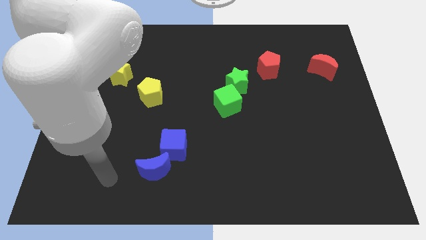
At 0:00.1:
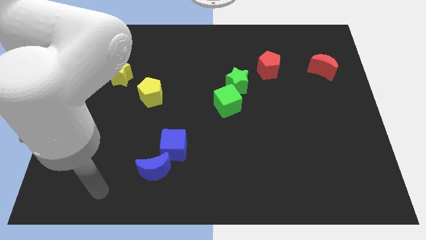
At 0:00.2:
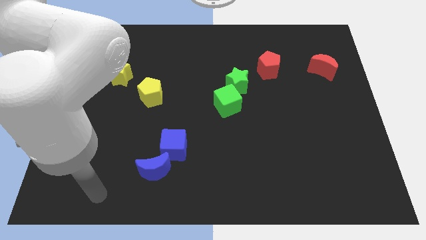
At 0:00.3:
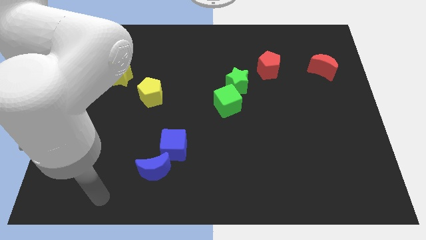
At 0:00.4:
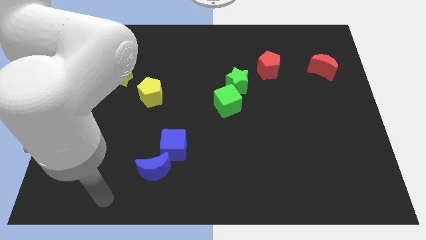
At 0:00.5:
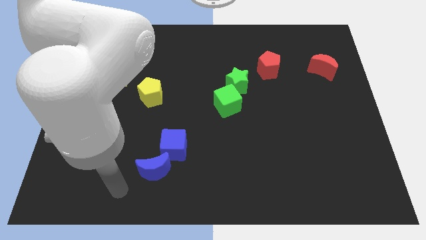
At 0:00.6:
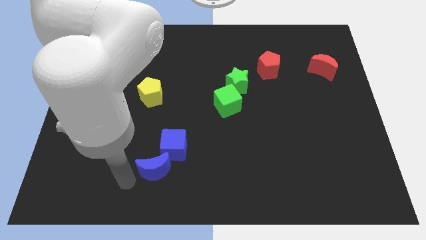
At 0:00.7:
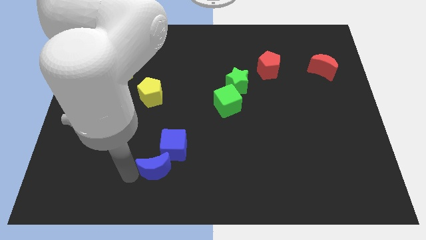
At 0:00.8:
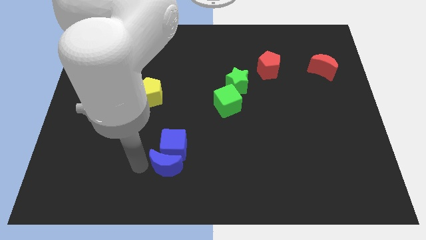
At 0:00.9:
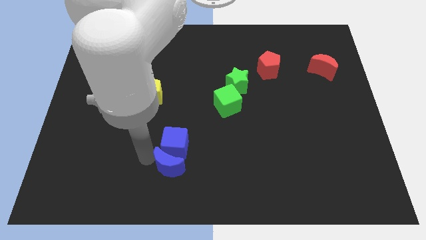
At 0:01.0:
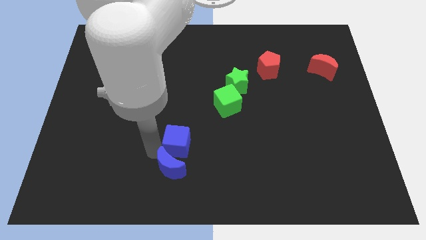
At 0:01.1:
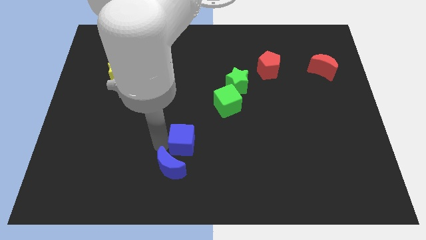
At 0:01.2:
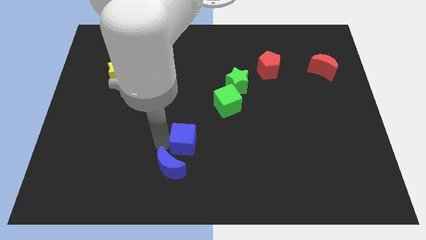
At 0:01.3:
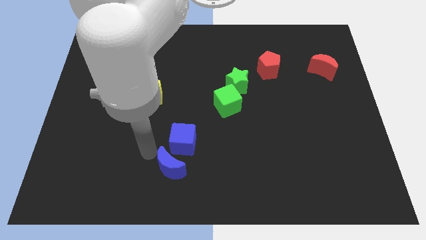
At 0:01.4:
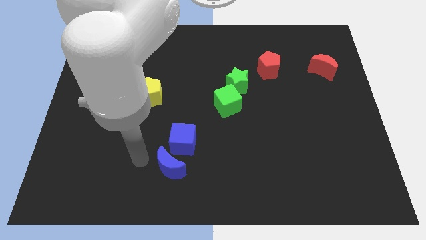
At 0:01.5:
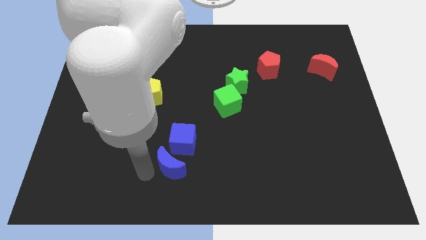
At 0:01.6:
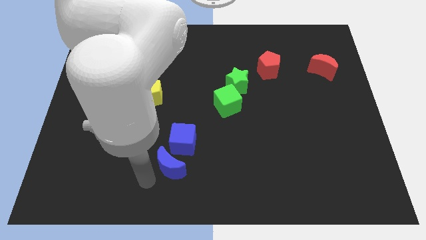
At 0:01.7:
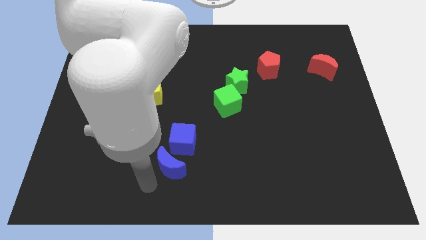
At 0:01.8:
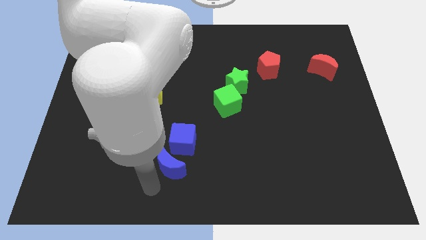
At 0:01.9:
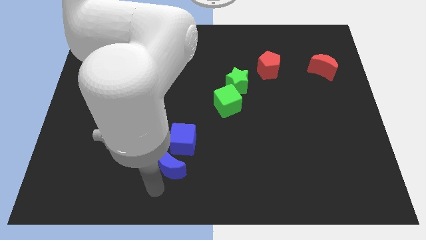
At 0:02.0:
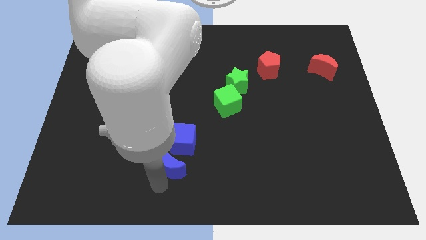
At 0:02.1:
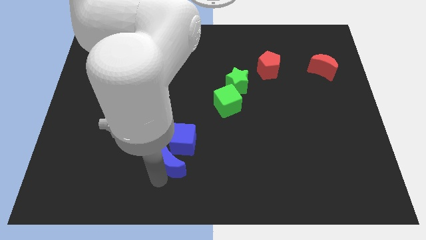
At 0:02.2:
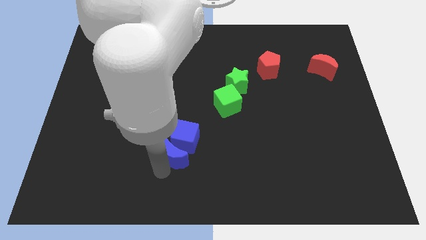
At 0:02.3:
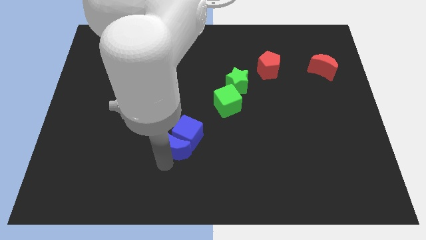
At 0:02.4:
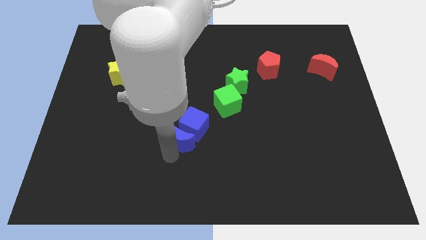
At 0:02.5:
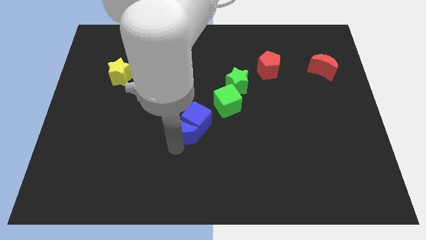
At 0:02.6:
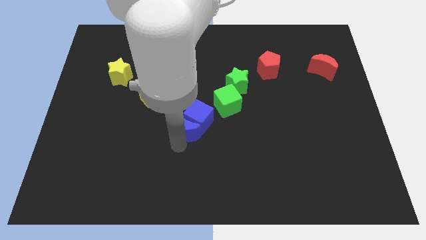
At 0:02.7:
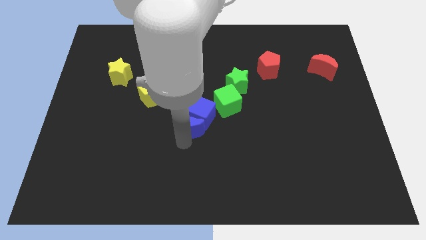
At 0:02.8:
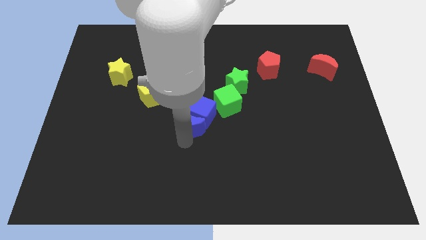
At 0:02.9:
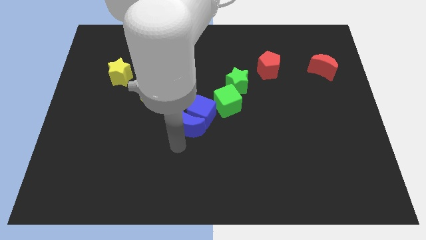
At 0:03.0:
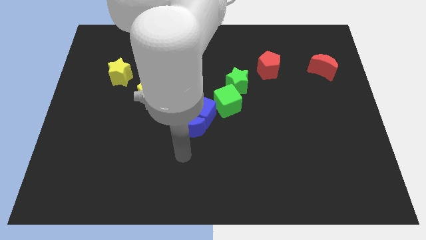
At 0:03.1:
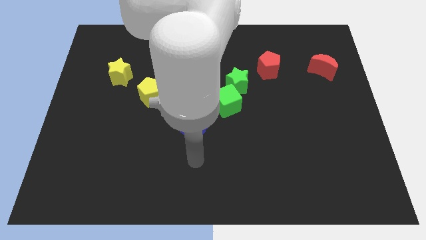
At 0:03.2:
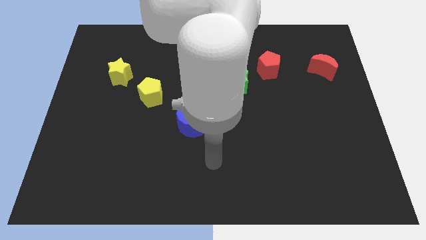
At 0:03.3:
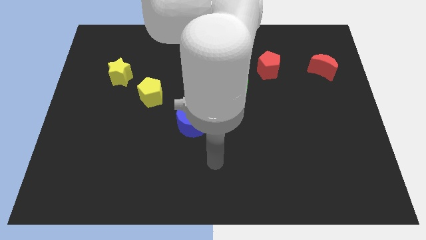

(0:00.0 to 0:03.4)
place the blue cube and blue crescent at the center

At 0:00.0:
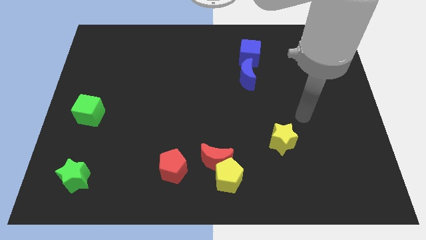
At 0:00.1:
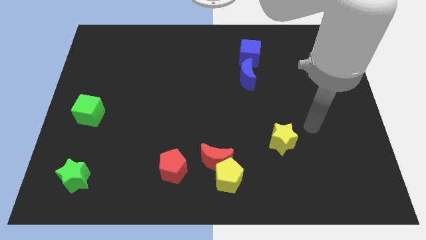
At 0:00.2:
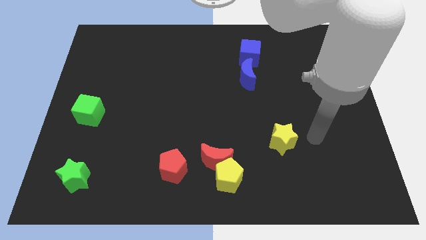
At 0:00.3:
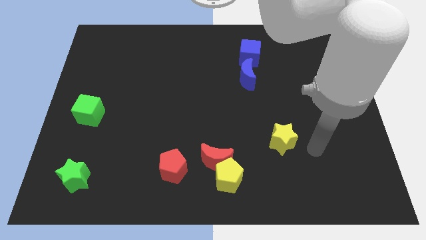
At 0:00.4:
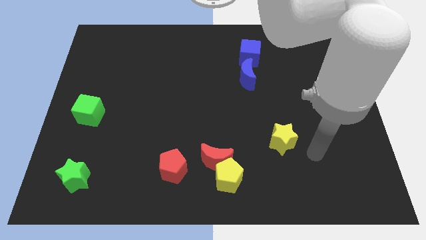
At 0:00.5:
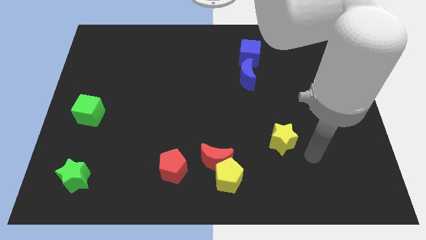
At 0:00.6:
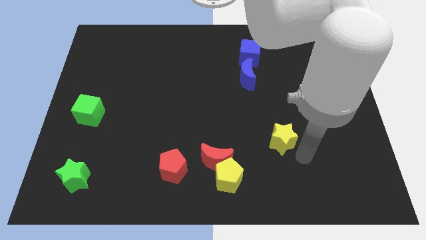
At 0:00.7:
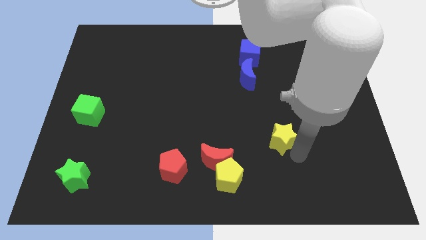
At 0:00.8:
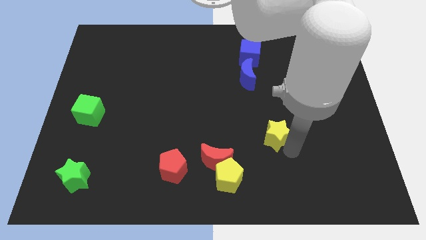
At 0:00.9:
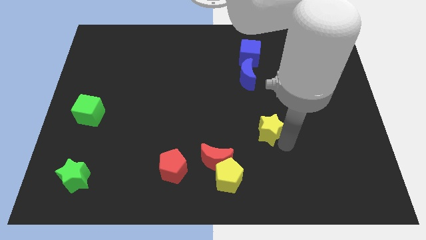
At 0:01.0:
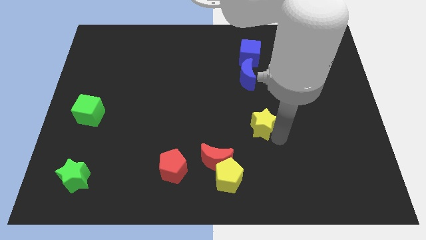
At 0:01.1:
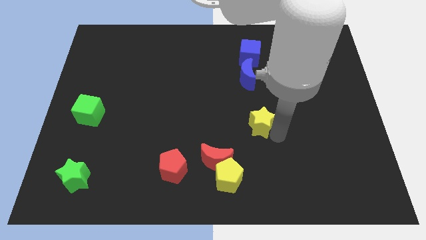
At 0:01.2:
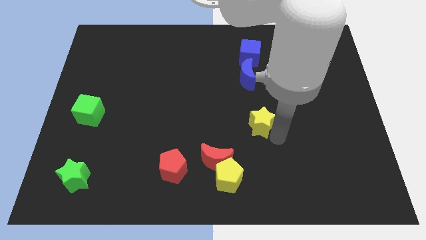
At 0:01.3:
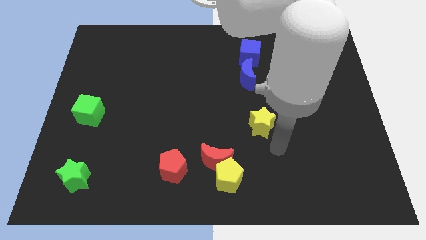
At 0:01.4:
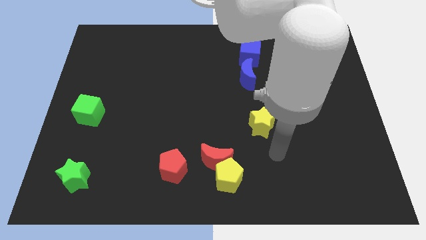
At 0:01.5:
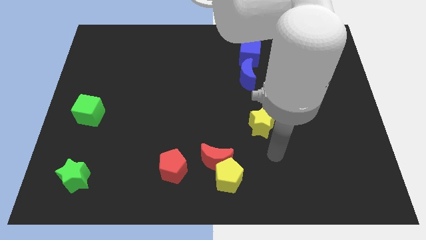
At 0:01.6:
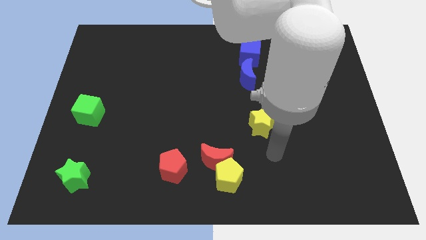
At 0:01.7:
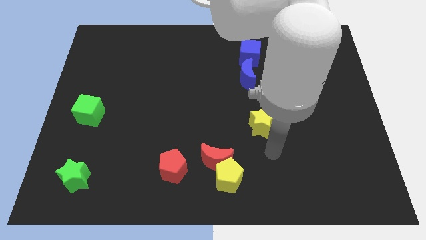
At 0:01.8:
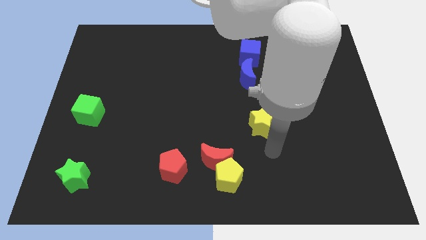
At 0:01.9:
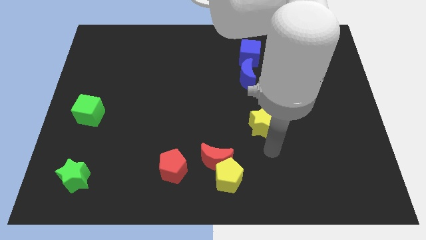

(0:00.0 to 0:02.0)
move the yellow star to the center

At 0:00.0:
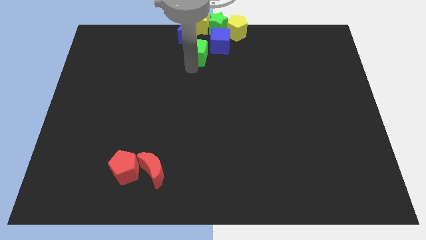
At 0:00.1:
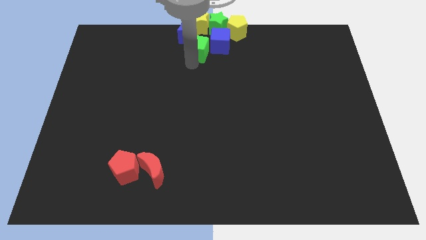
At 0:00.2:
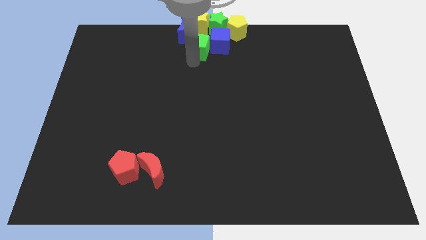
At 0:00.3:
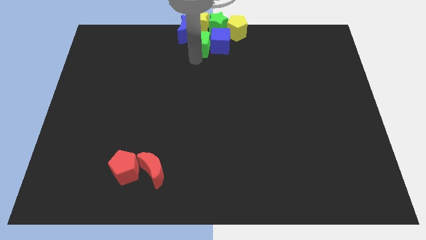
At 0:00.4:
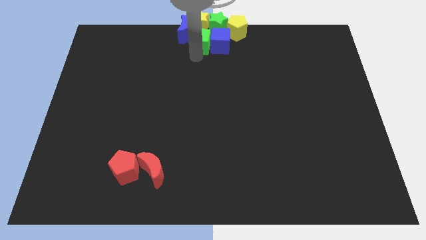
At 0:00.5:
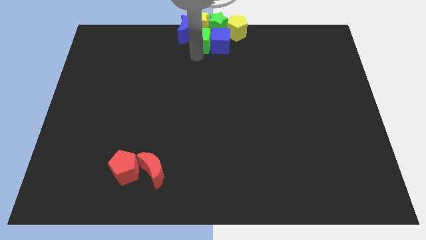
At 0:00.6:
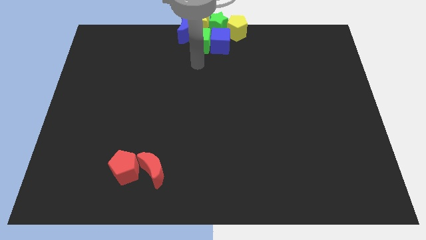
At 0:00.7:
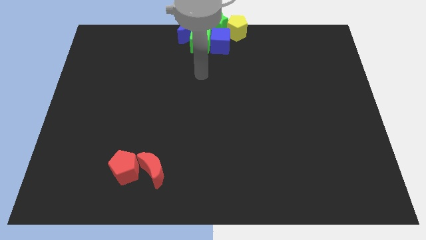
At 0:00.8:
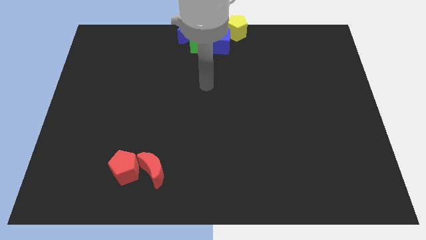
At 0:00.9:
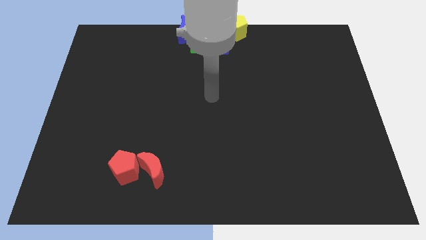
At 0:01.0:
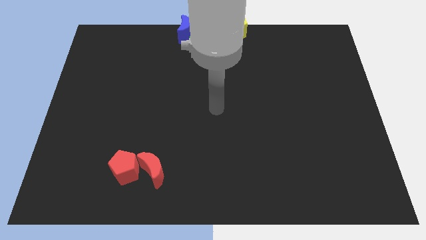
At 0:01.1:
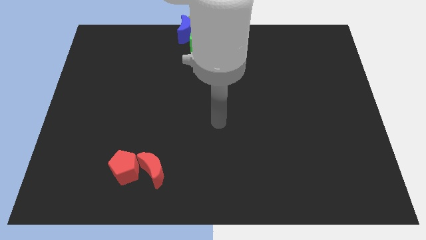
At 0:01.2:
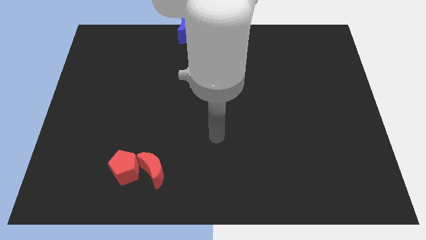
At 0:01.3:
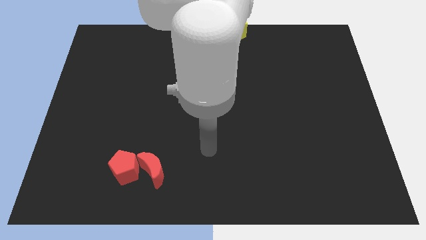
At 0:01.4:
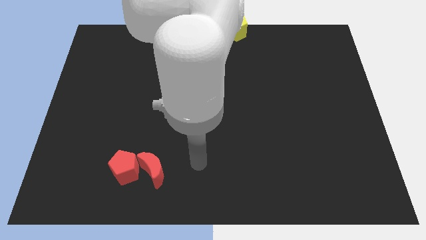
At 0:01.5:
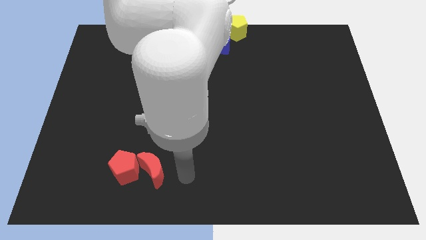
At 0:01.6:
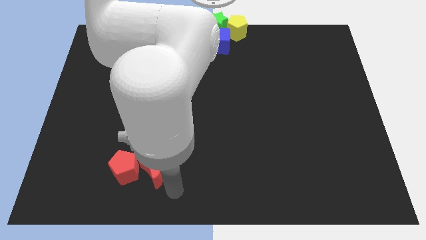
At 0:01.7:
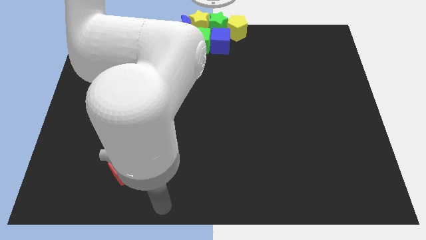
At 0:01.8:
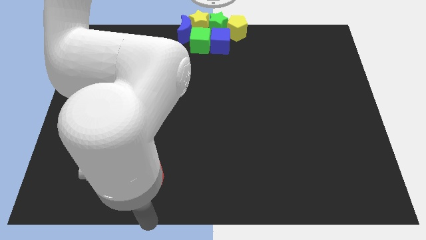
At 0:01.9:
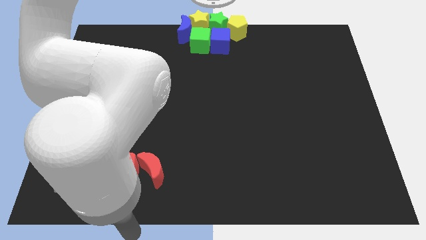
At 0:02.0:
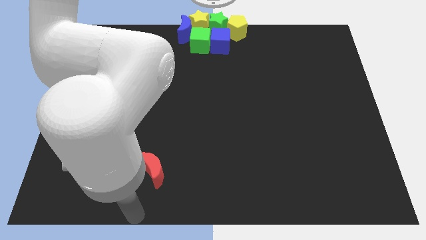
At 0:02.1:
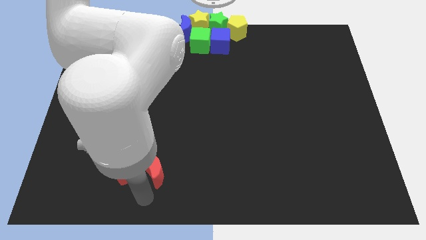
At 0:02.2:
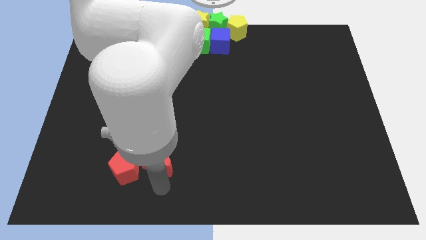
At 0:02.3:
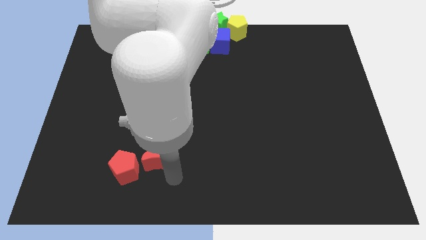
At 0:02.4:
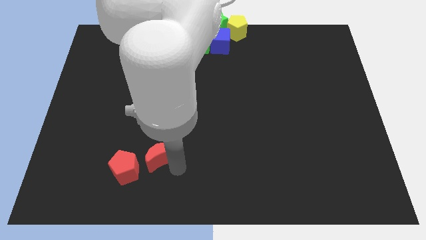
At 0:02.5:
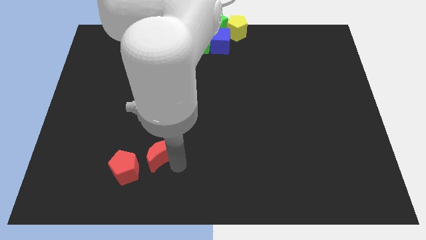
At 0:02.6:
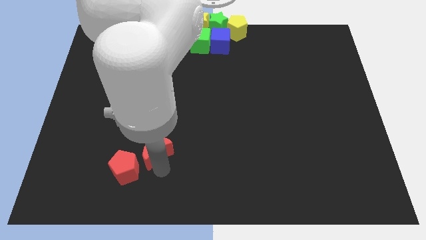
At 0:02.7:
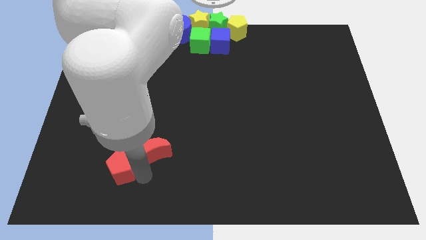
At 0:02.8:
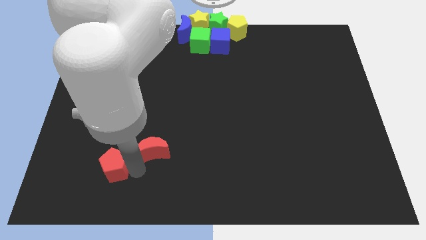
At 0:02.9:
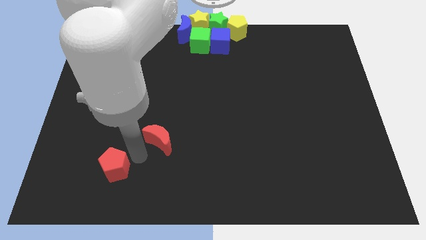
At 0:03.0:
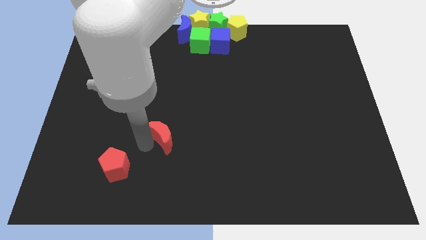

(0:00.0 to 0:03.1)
move arm and seprate the red moon and red pentagon

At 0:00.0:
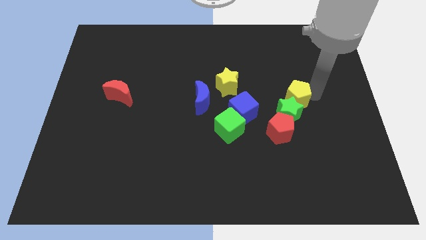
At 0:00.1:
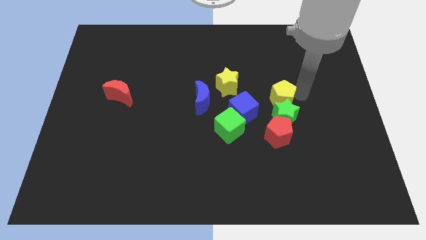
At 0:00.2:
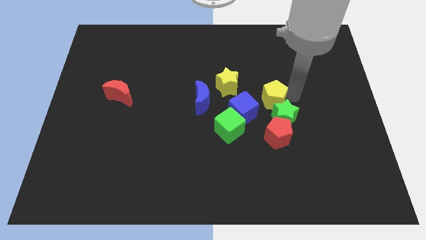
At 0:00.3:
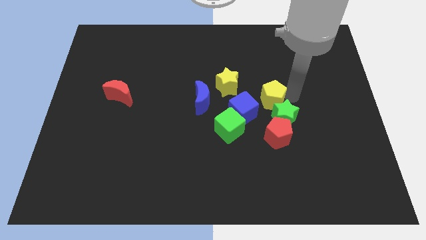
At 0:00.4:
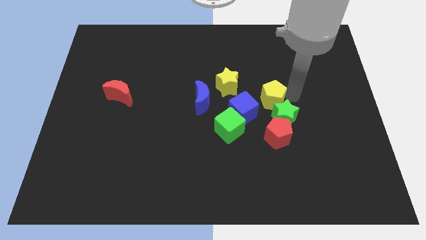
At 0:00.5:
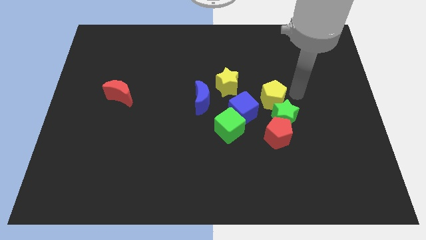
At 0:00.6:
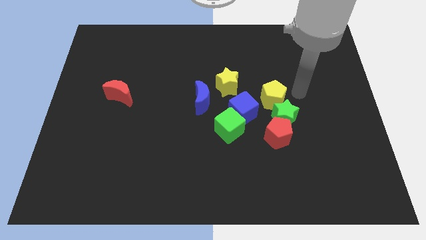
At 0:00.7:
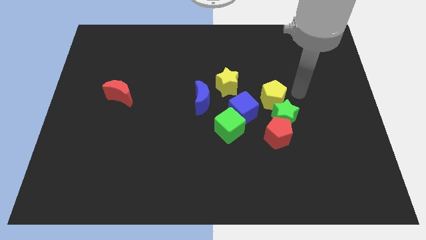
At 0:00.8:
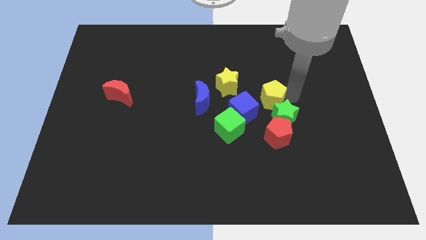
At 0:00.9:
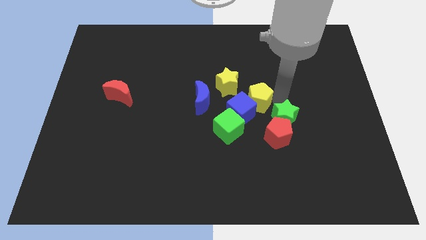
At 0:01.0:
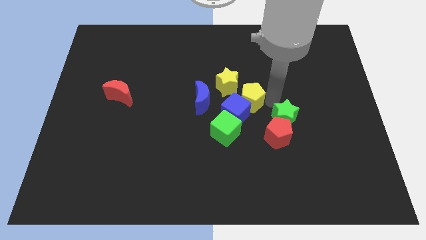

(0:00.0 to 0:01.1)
push the yellow pentagon into the blue cube
